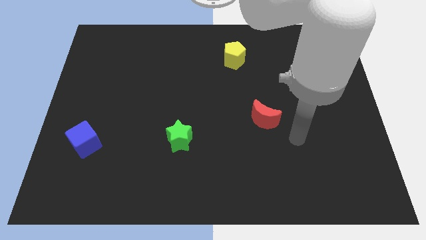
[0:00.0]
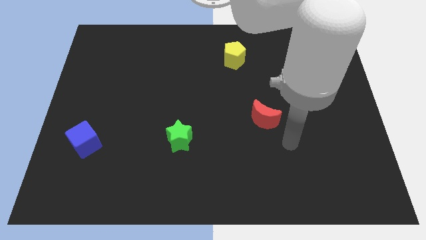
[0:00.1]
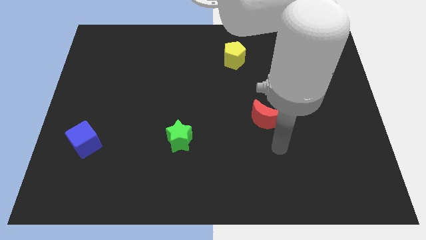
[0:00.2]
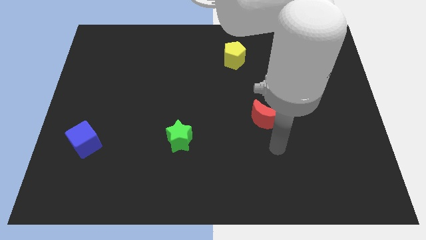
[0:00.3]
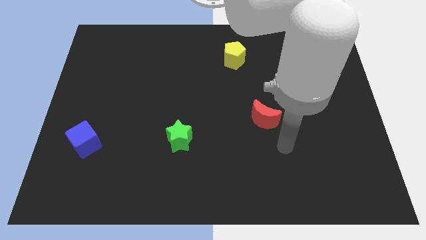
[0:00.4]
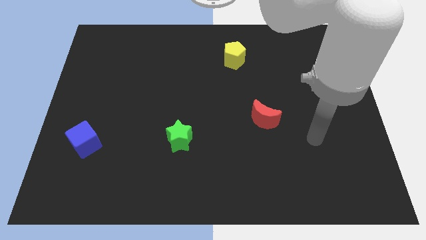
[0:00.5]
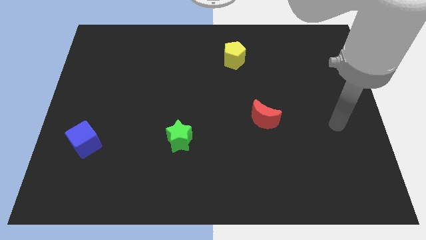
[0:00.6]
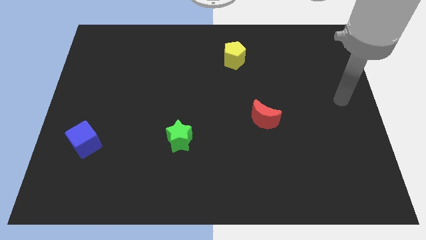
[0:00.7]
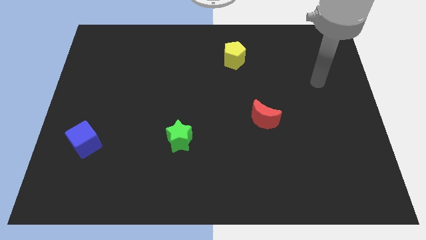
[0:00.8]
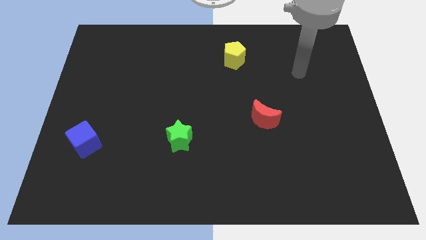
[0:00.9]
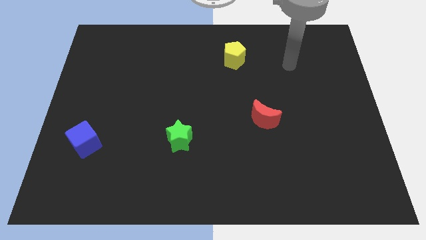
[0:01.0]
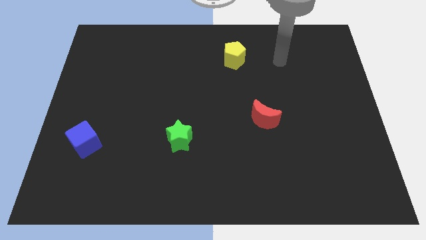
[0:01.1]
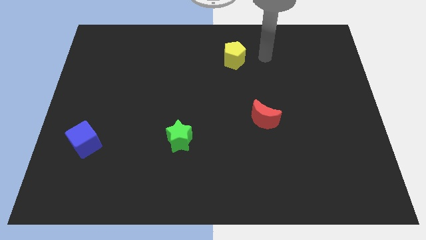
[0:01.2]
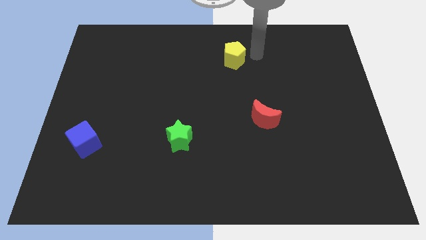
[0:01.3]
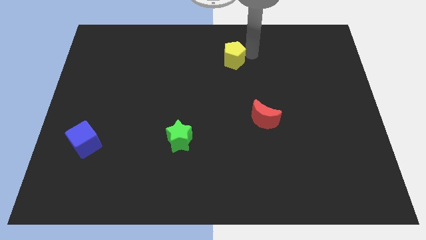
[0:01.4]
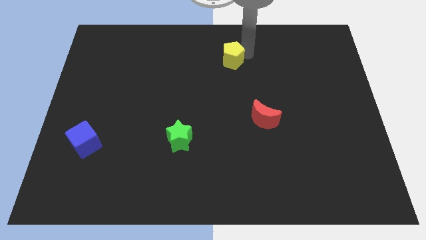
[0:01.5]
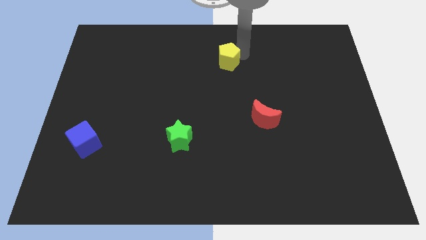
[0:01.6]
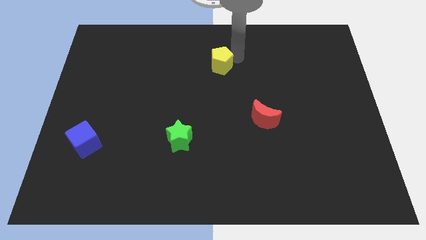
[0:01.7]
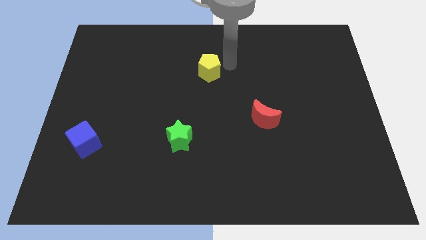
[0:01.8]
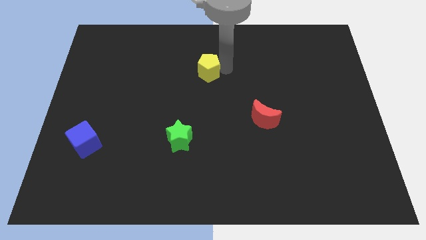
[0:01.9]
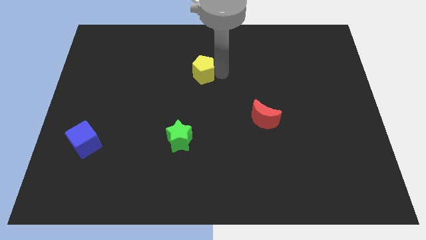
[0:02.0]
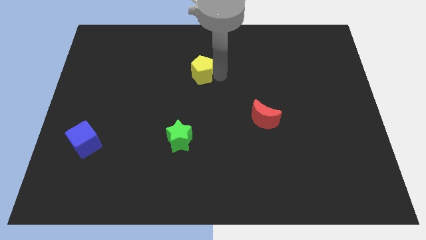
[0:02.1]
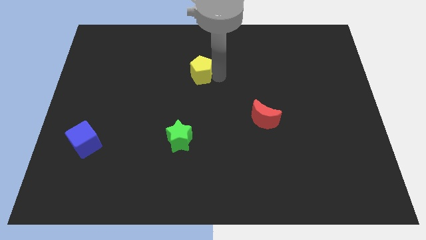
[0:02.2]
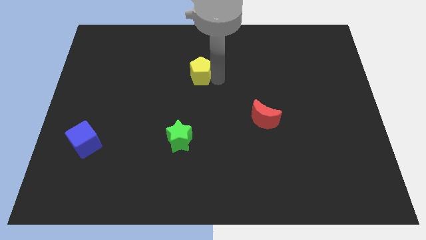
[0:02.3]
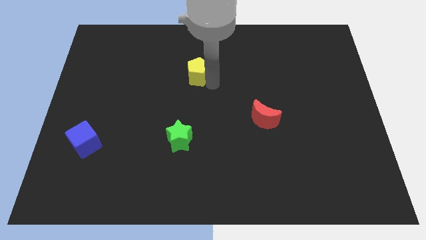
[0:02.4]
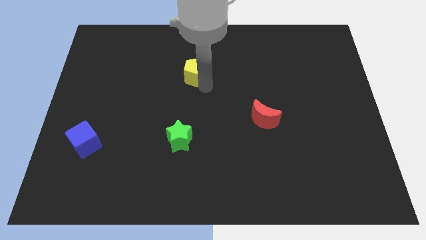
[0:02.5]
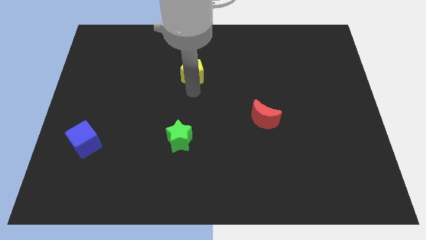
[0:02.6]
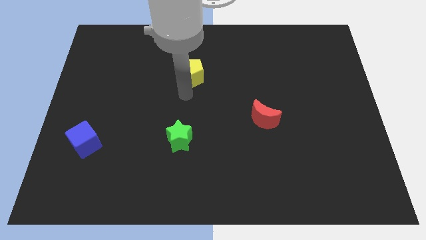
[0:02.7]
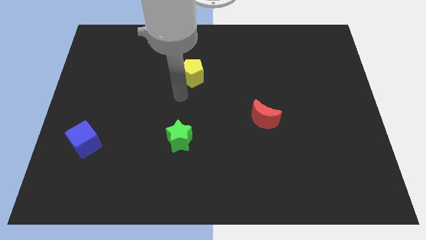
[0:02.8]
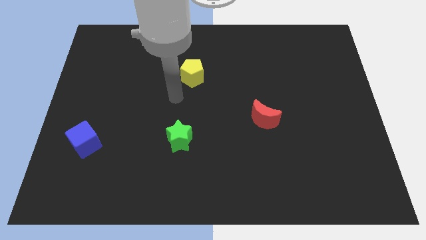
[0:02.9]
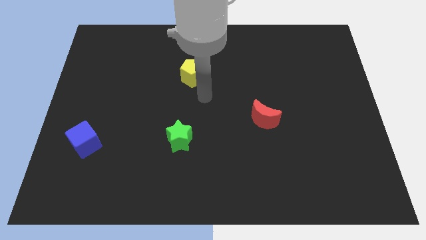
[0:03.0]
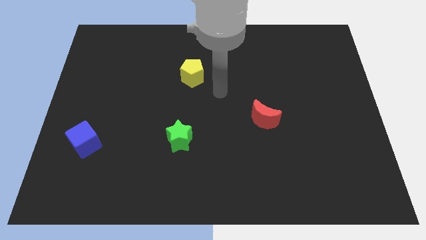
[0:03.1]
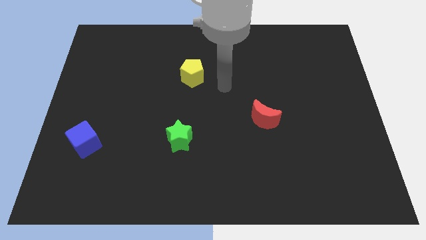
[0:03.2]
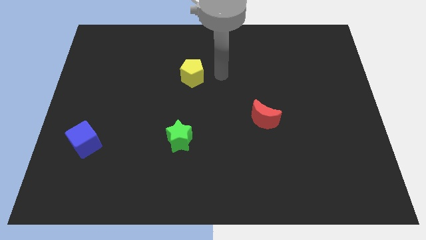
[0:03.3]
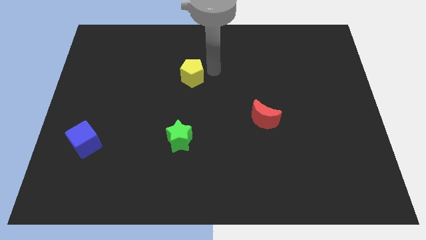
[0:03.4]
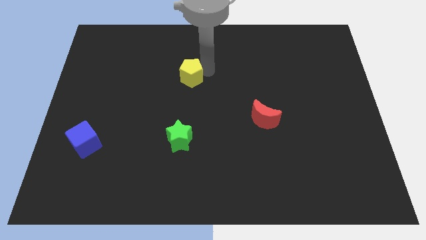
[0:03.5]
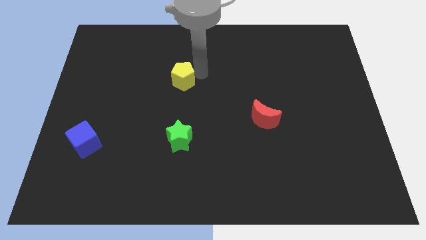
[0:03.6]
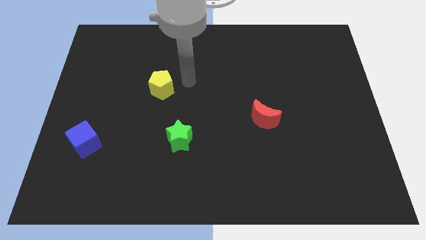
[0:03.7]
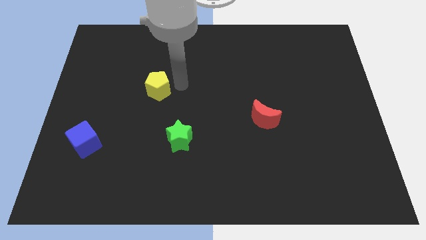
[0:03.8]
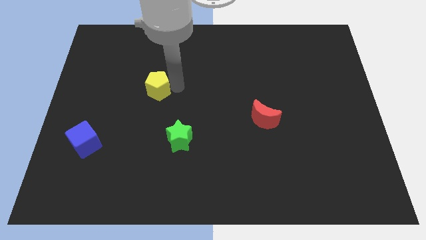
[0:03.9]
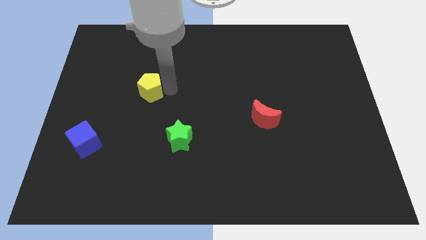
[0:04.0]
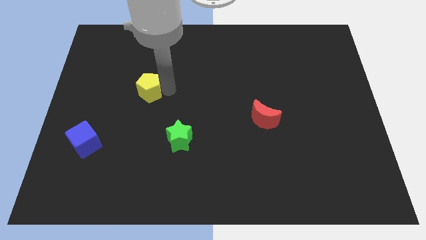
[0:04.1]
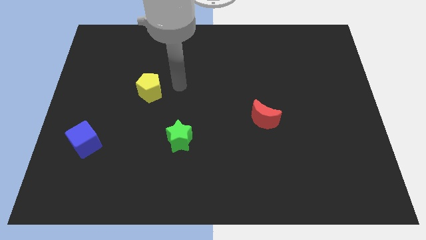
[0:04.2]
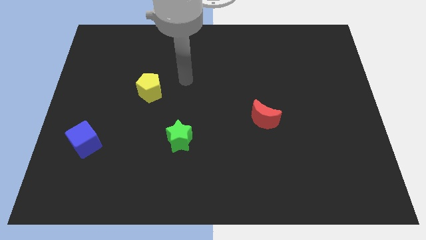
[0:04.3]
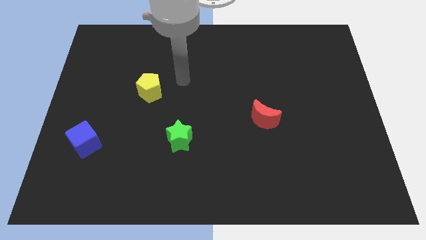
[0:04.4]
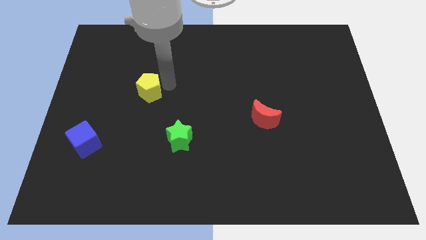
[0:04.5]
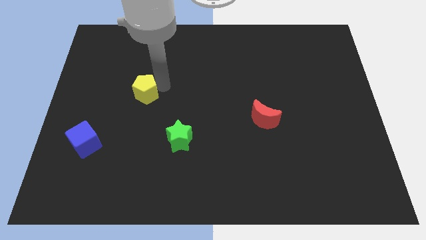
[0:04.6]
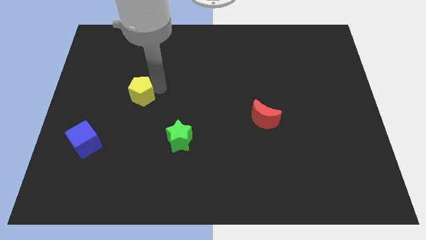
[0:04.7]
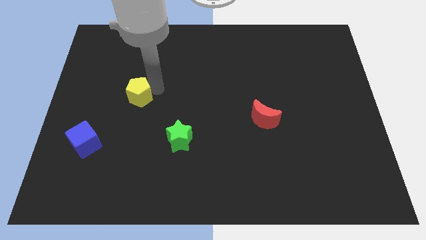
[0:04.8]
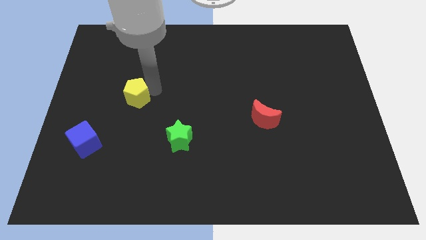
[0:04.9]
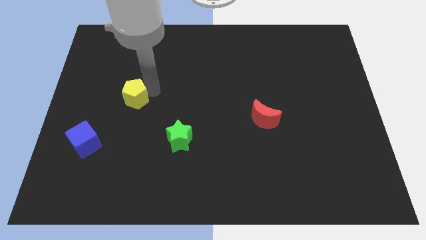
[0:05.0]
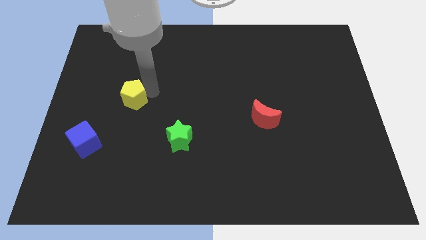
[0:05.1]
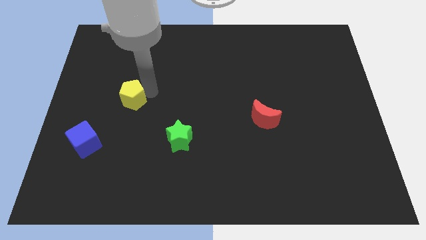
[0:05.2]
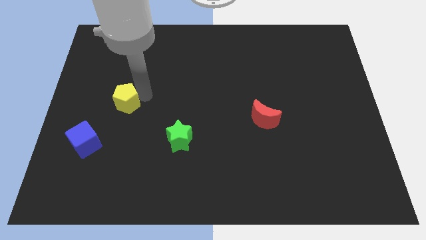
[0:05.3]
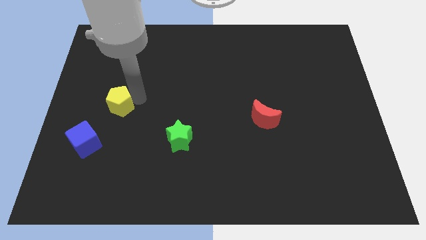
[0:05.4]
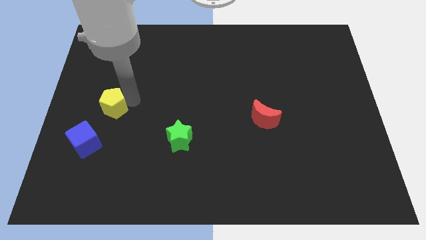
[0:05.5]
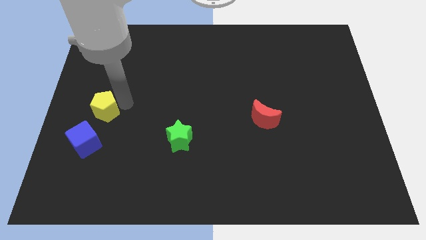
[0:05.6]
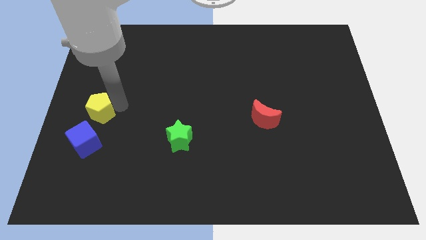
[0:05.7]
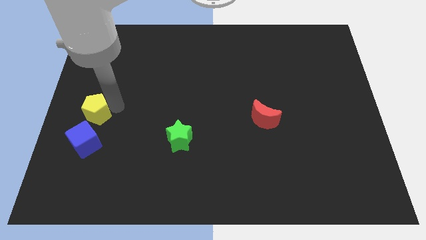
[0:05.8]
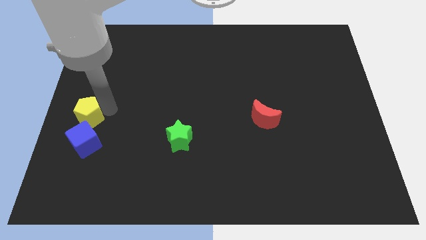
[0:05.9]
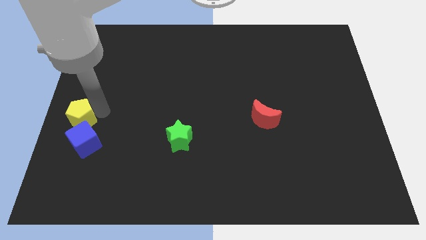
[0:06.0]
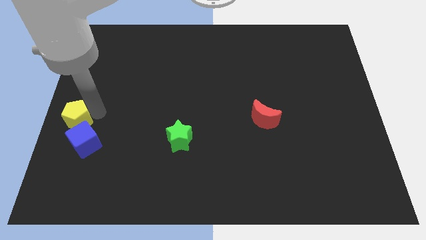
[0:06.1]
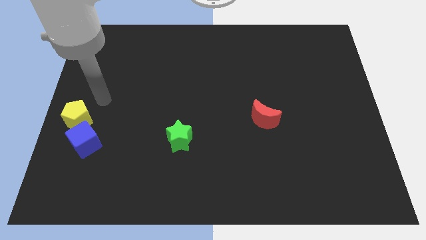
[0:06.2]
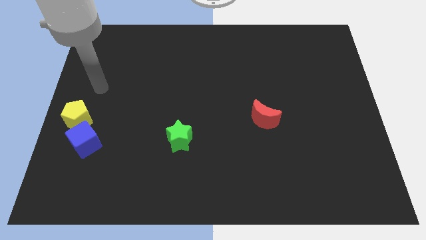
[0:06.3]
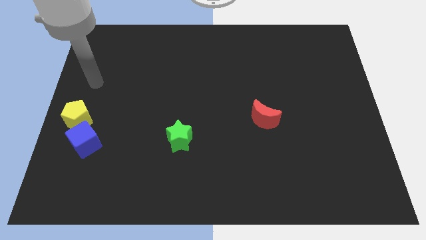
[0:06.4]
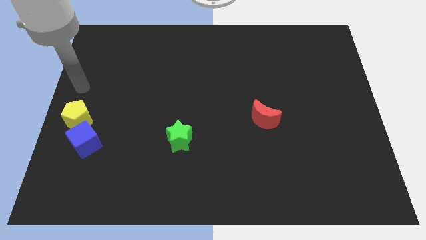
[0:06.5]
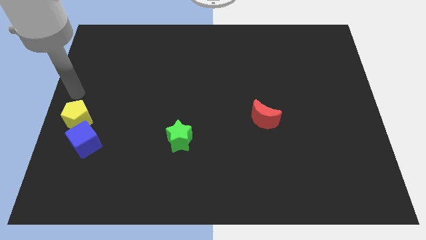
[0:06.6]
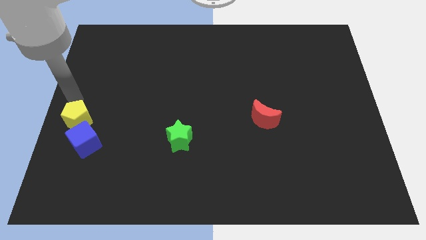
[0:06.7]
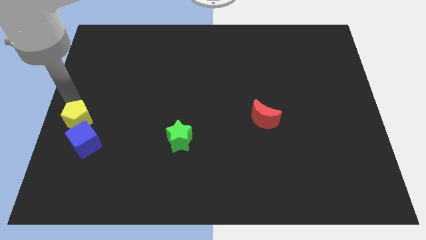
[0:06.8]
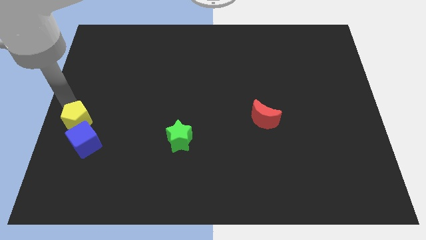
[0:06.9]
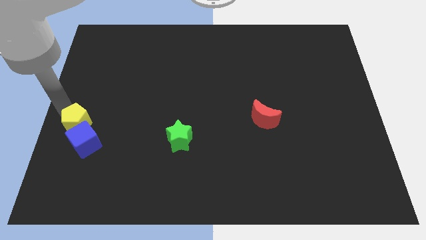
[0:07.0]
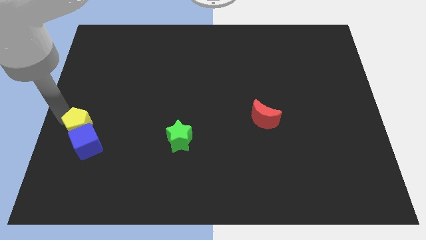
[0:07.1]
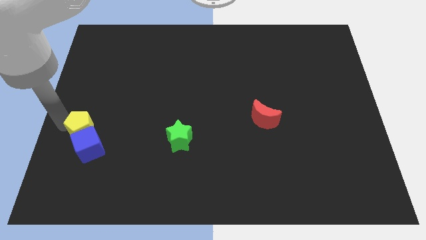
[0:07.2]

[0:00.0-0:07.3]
move the yellow block towards the blue block

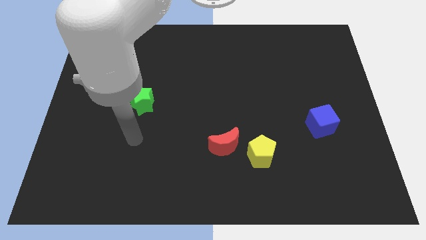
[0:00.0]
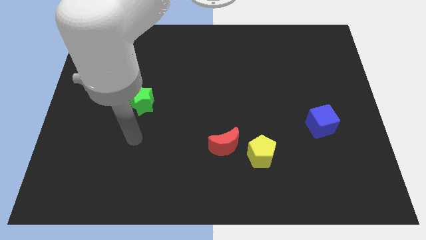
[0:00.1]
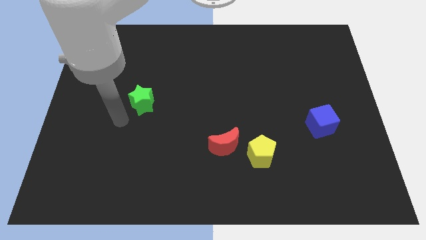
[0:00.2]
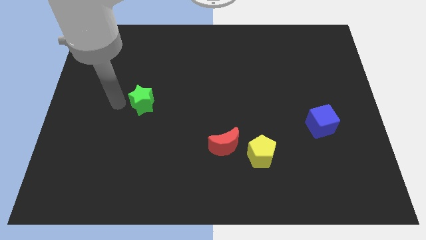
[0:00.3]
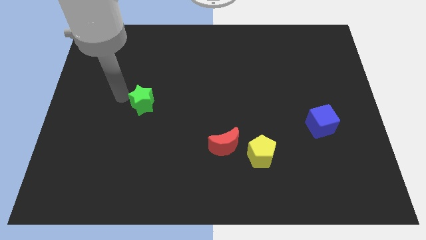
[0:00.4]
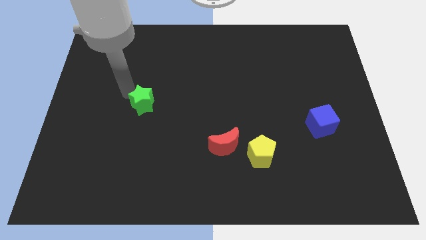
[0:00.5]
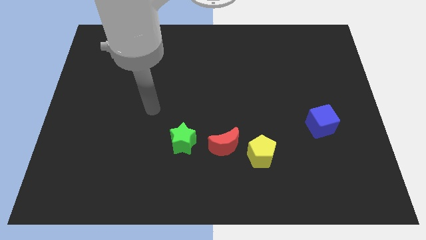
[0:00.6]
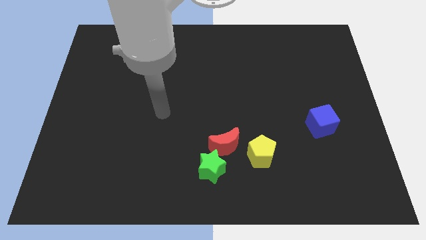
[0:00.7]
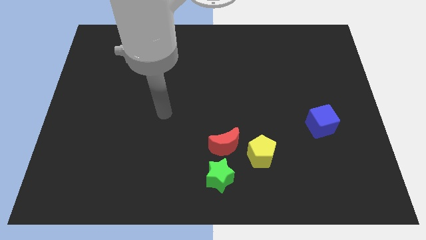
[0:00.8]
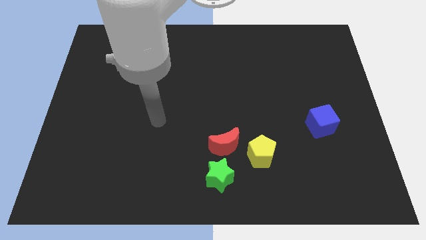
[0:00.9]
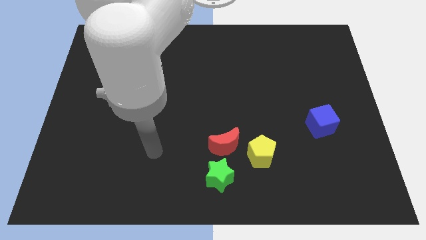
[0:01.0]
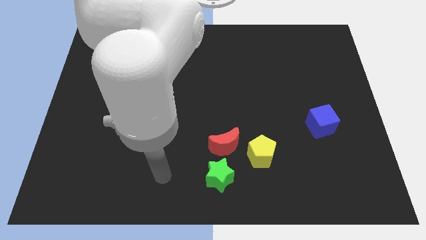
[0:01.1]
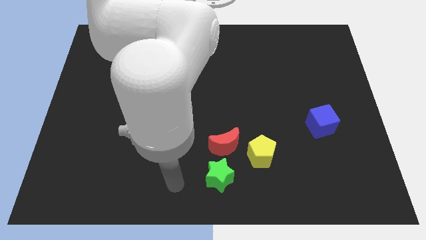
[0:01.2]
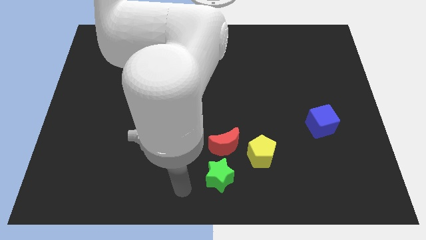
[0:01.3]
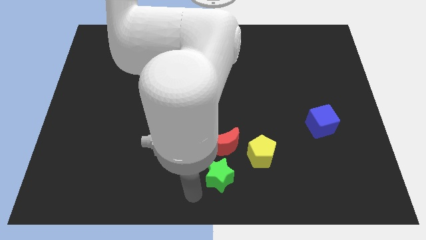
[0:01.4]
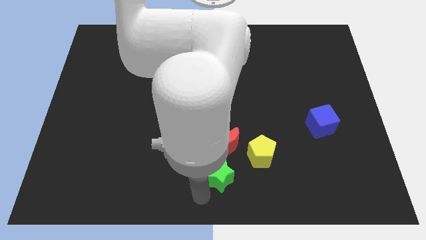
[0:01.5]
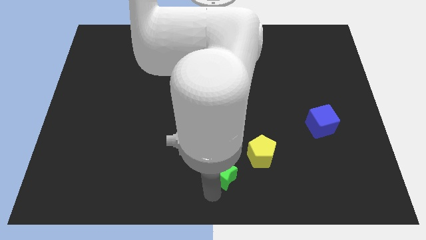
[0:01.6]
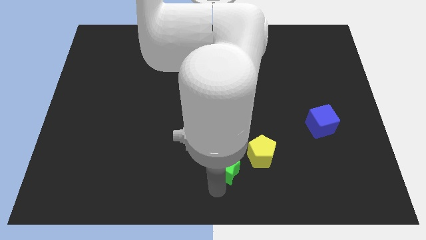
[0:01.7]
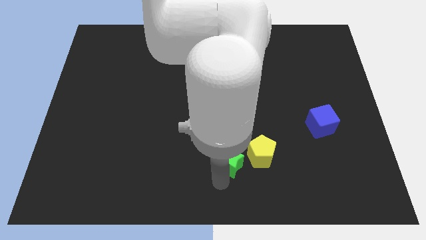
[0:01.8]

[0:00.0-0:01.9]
move the star to the red block
